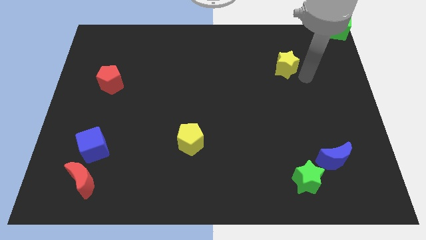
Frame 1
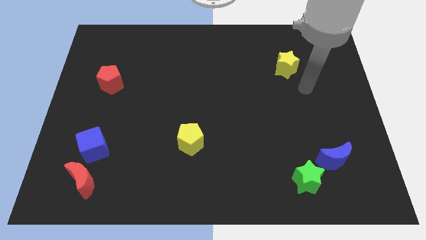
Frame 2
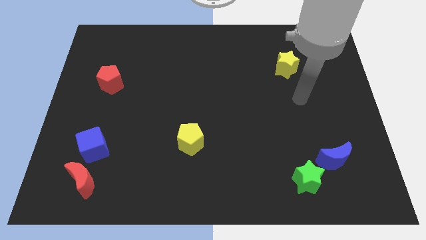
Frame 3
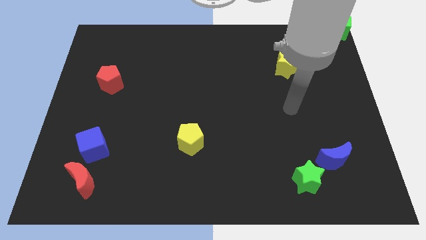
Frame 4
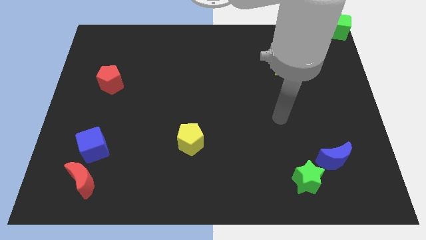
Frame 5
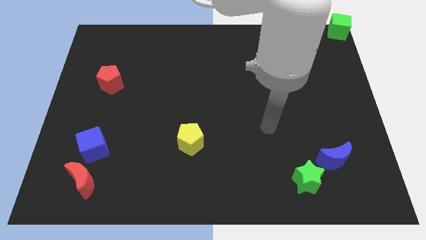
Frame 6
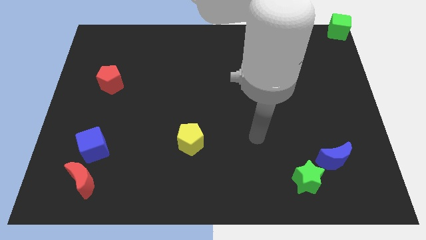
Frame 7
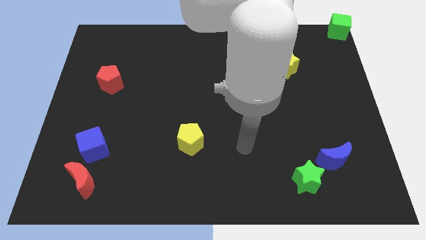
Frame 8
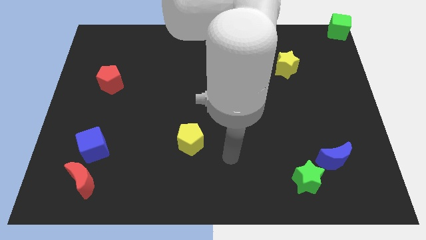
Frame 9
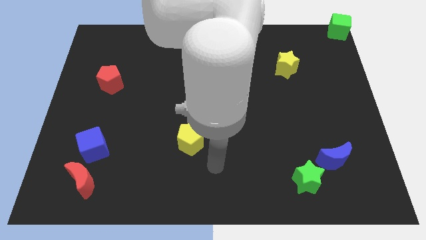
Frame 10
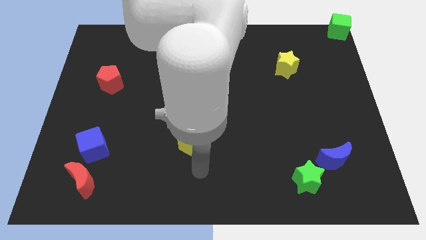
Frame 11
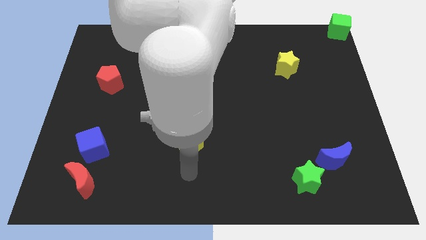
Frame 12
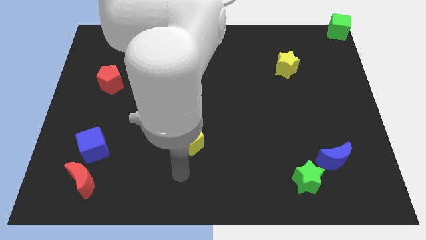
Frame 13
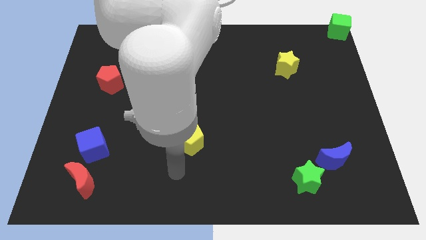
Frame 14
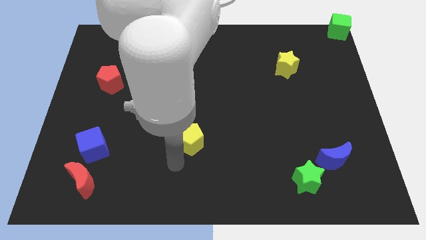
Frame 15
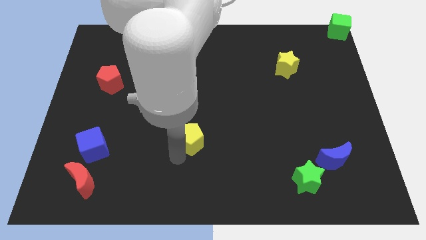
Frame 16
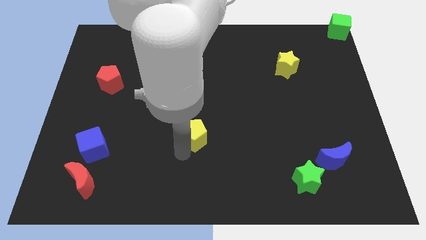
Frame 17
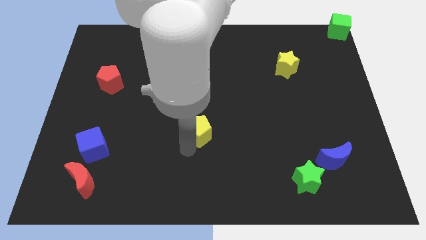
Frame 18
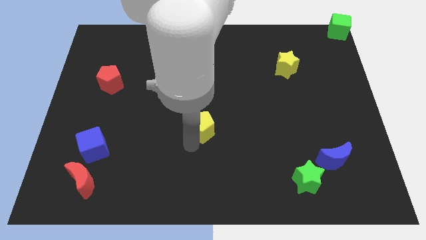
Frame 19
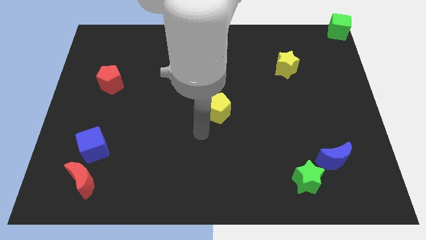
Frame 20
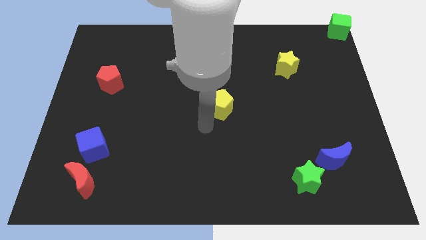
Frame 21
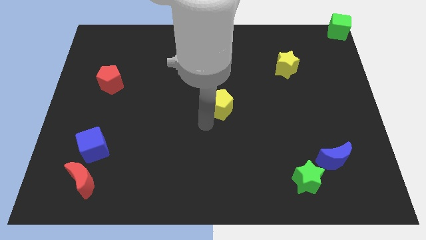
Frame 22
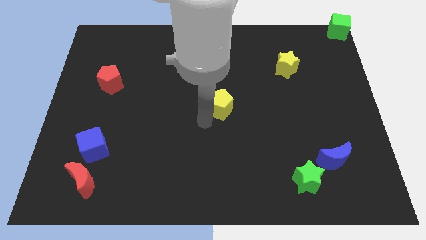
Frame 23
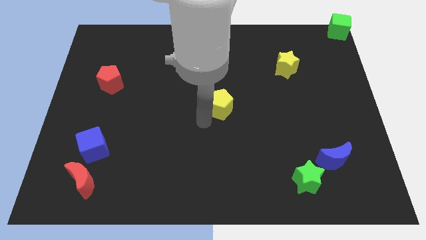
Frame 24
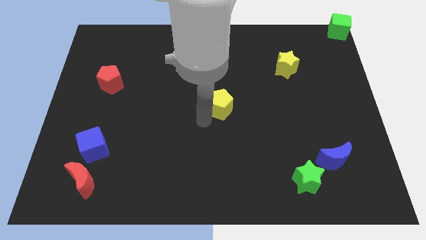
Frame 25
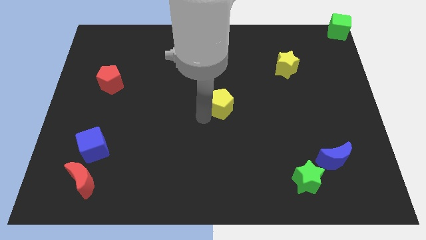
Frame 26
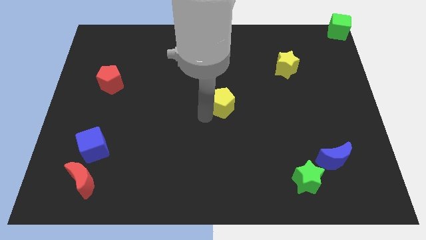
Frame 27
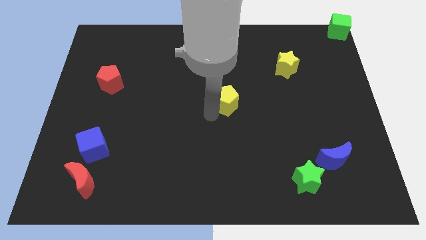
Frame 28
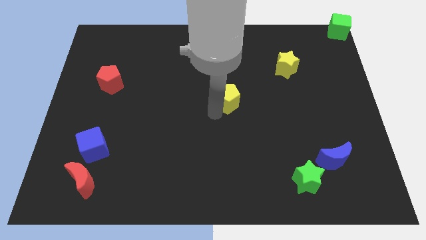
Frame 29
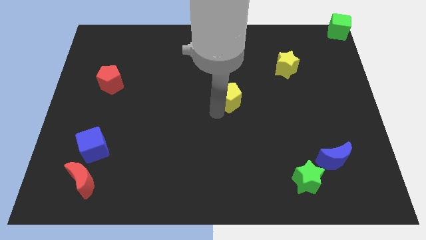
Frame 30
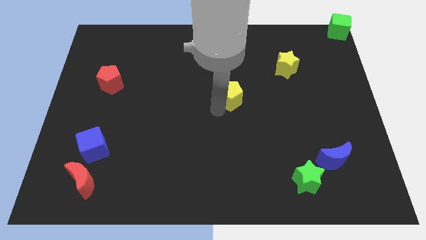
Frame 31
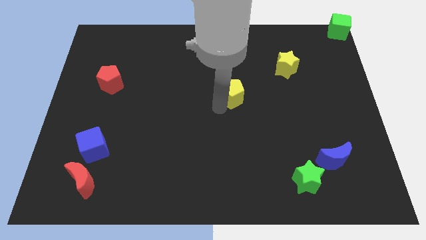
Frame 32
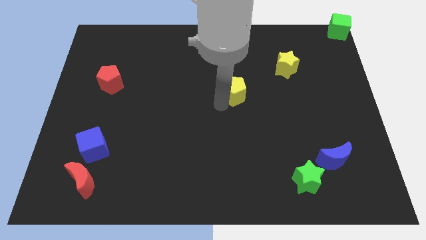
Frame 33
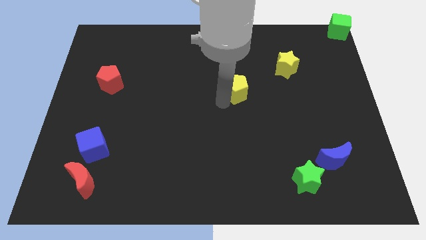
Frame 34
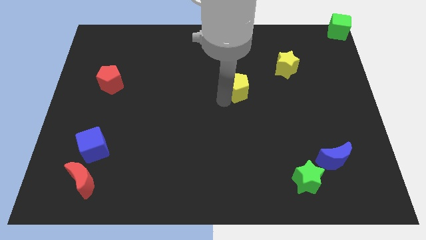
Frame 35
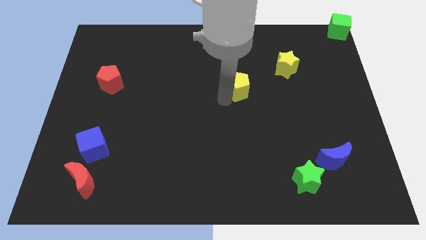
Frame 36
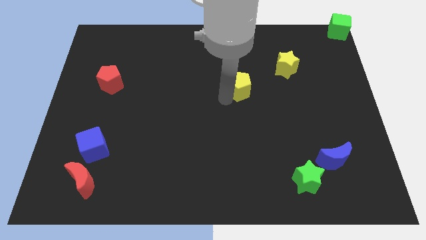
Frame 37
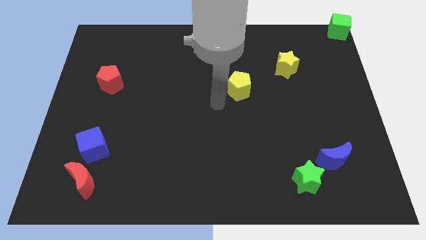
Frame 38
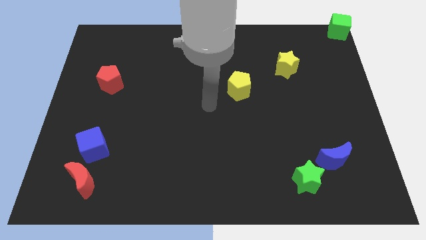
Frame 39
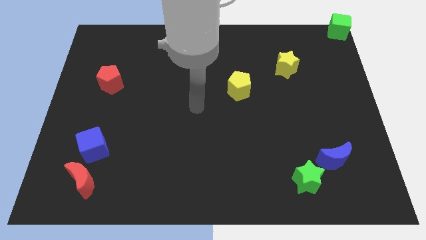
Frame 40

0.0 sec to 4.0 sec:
move the yellow pentagon to the bottom left of the yellow star

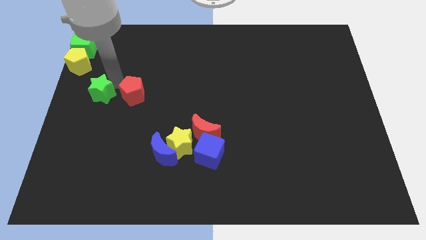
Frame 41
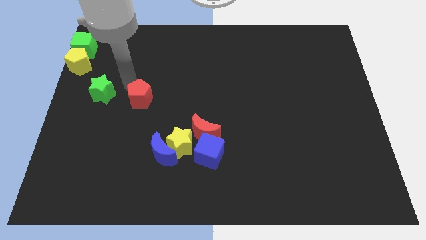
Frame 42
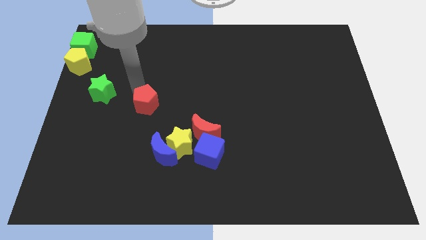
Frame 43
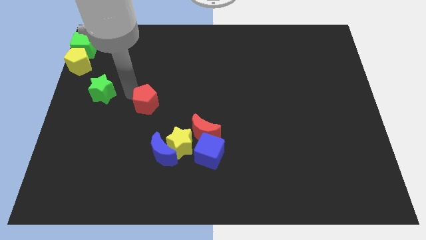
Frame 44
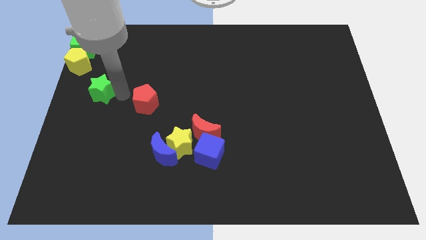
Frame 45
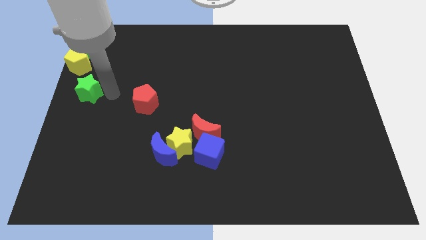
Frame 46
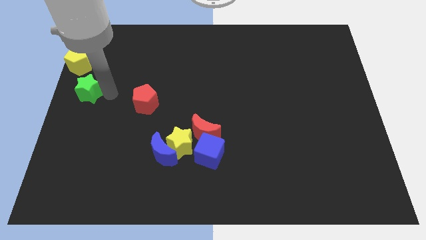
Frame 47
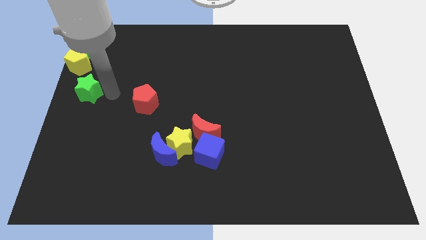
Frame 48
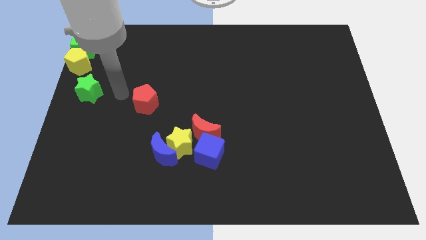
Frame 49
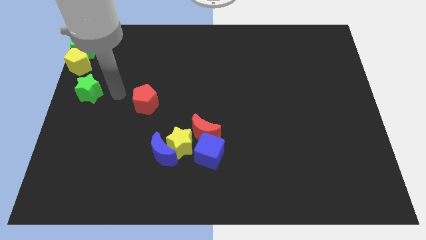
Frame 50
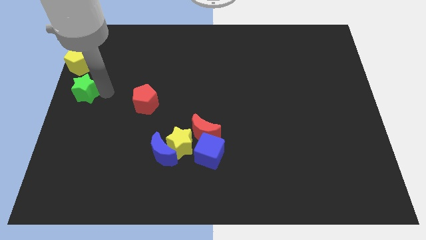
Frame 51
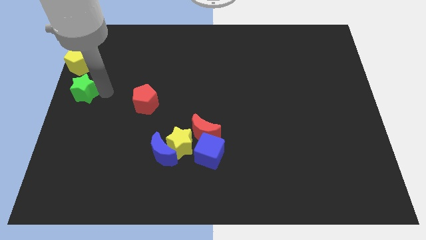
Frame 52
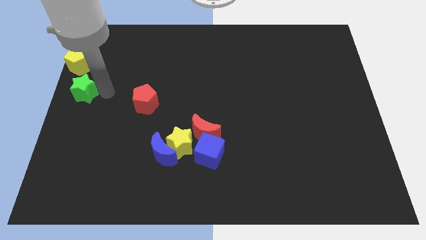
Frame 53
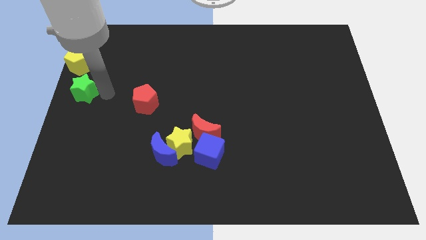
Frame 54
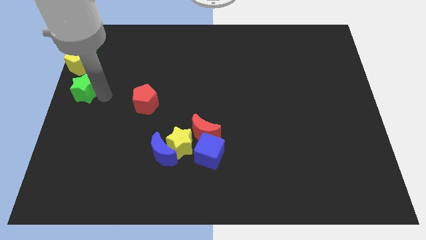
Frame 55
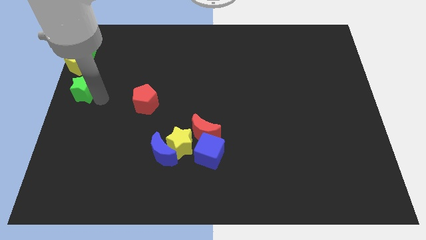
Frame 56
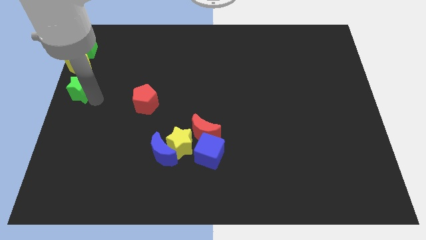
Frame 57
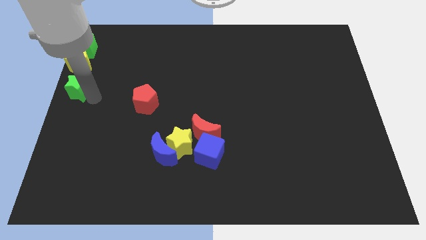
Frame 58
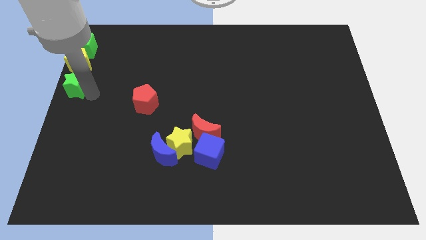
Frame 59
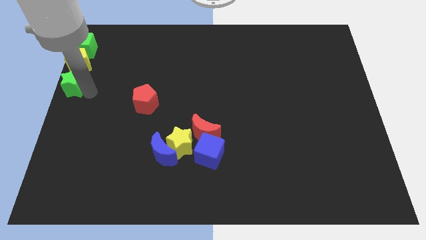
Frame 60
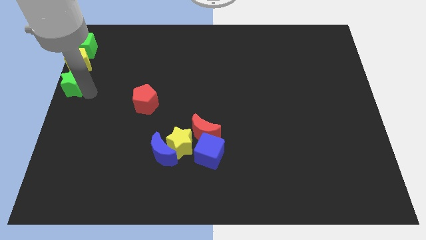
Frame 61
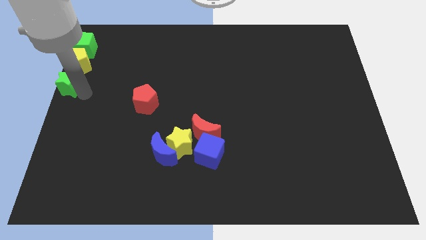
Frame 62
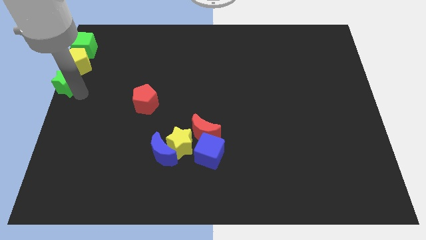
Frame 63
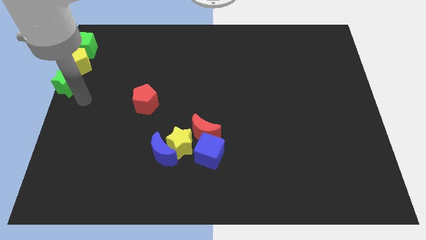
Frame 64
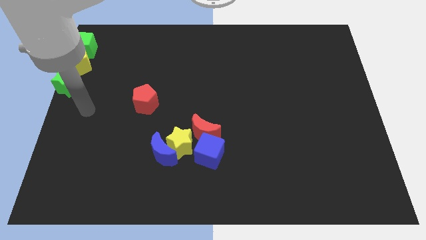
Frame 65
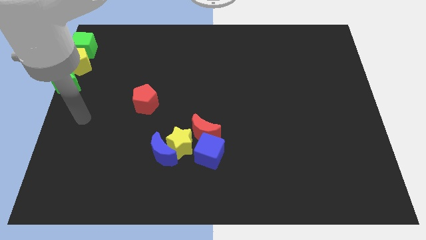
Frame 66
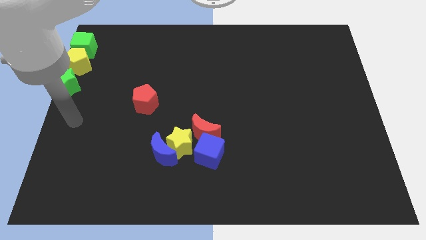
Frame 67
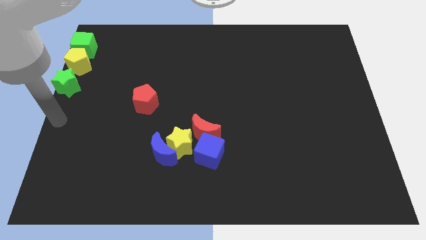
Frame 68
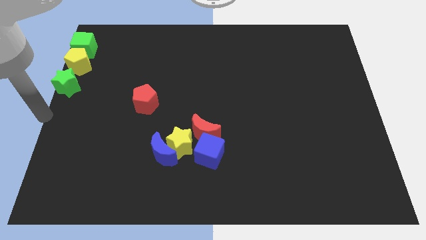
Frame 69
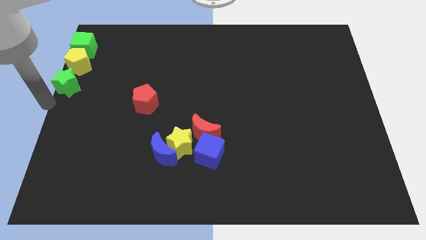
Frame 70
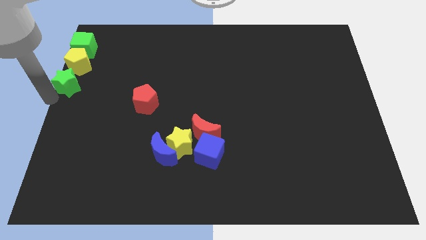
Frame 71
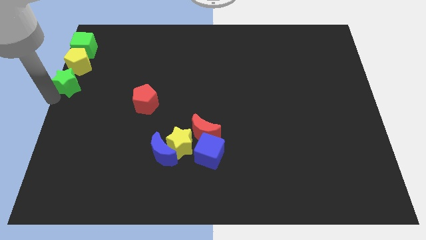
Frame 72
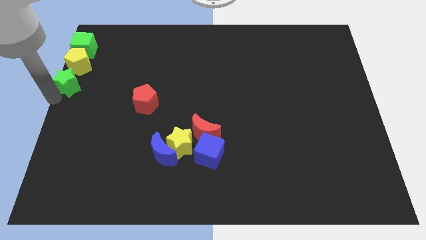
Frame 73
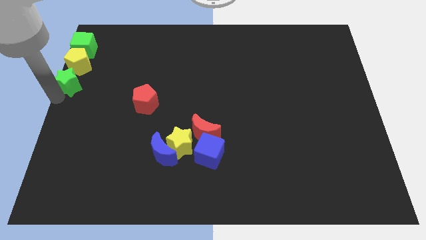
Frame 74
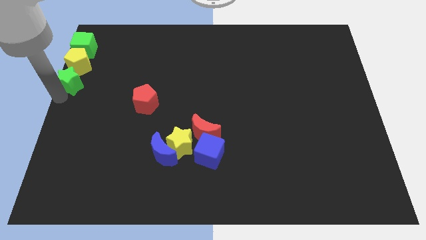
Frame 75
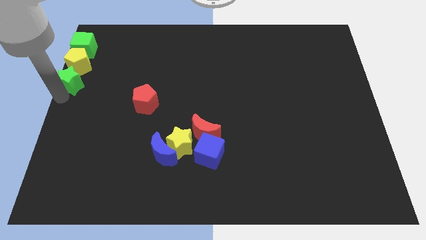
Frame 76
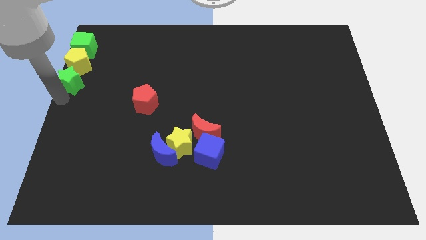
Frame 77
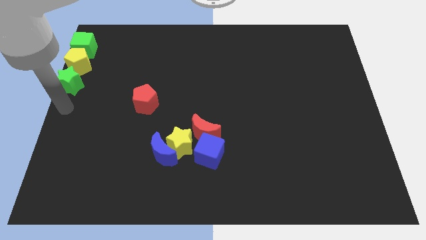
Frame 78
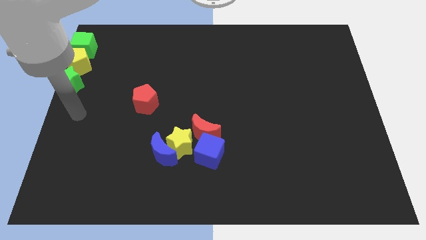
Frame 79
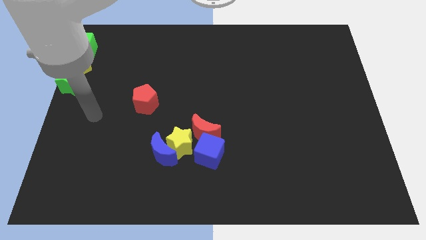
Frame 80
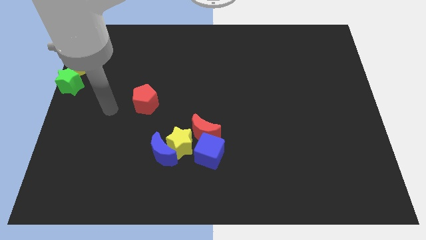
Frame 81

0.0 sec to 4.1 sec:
place the green star below the yellow pentagon

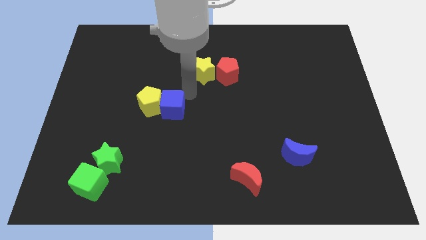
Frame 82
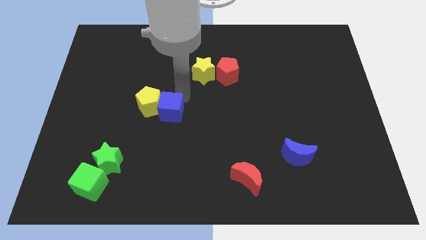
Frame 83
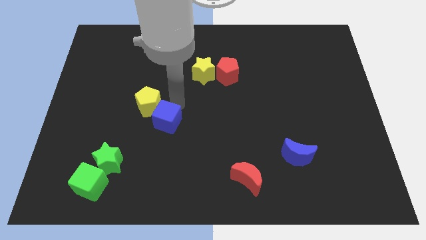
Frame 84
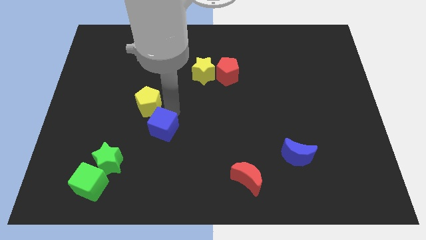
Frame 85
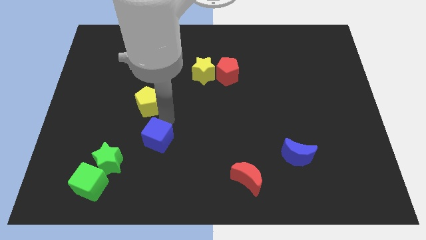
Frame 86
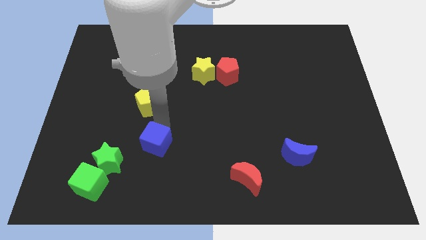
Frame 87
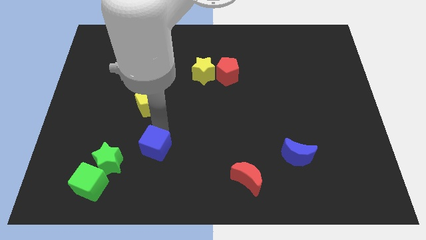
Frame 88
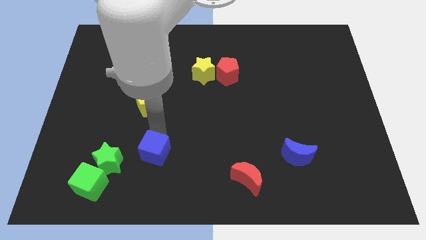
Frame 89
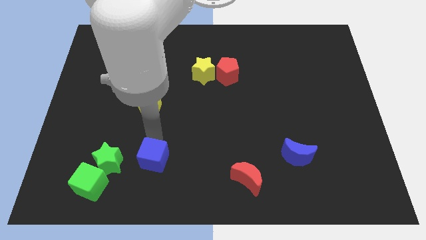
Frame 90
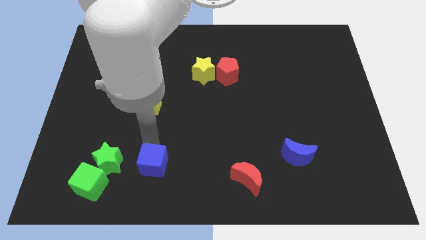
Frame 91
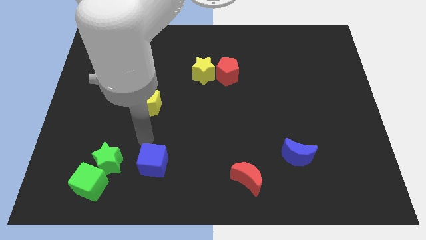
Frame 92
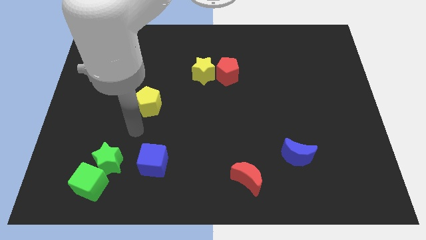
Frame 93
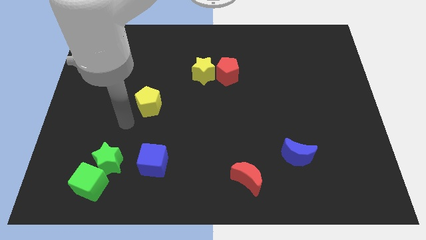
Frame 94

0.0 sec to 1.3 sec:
push the blue cube right to the green star
